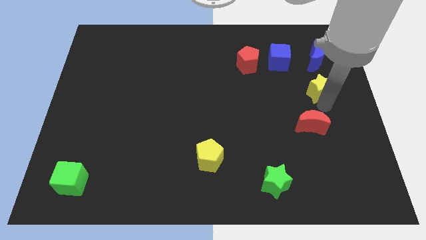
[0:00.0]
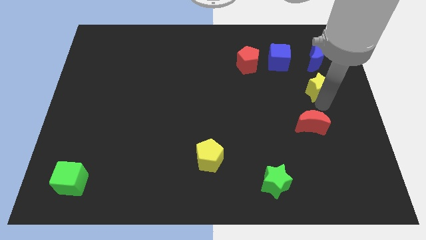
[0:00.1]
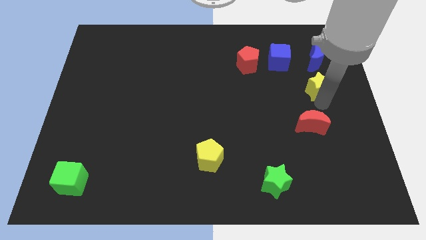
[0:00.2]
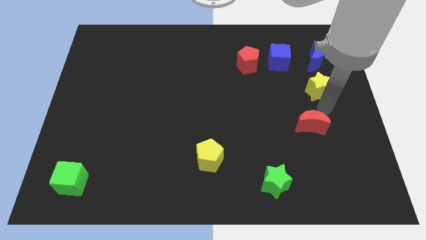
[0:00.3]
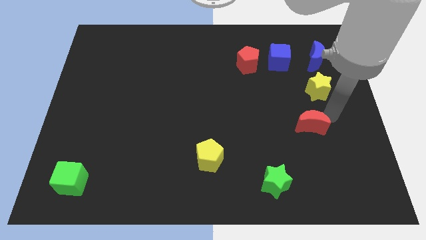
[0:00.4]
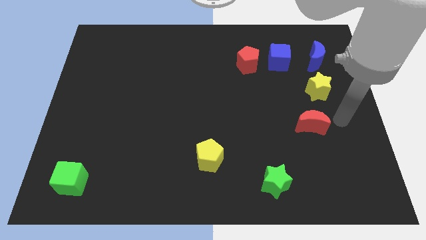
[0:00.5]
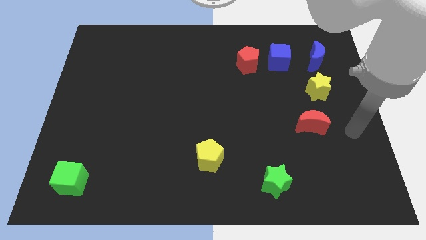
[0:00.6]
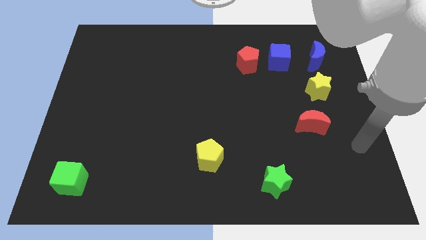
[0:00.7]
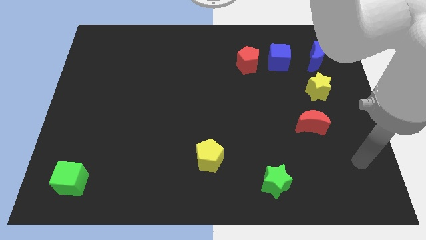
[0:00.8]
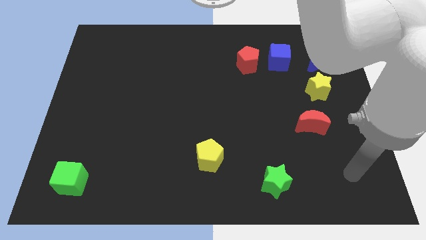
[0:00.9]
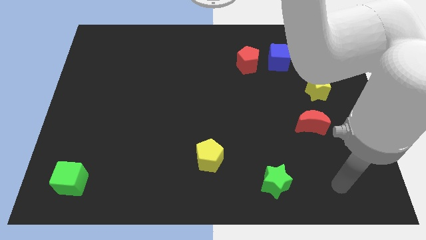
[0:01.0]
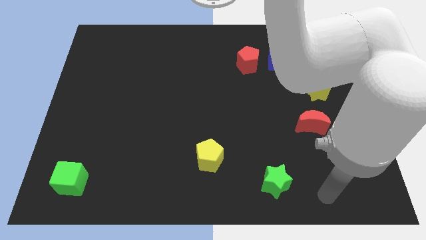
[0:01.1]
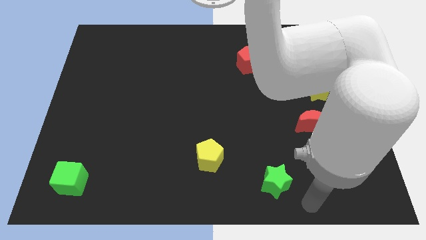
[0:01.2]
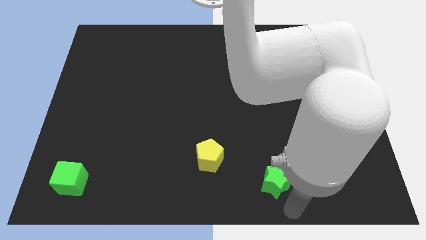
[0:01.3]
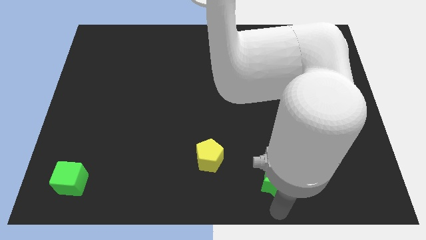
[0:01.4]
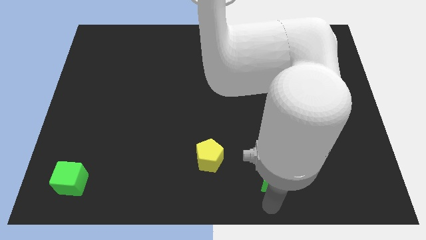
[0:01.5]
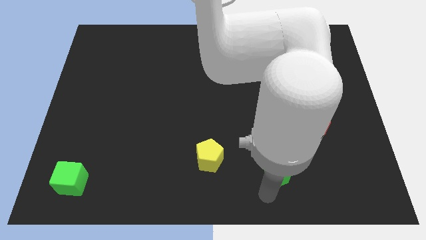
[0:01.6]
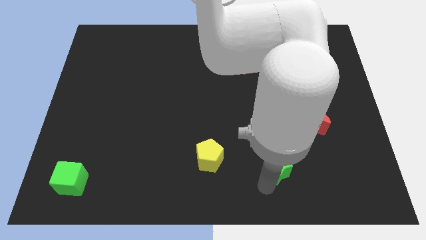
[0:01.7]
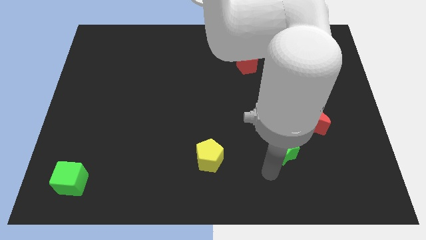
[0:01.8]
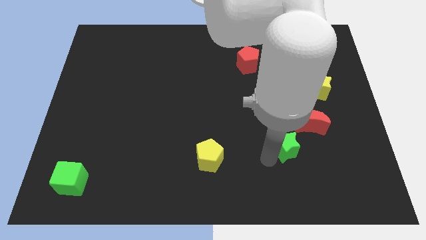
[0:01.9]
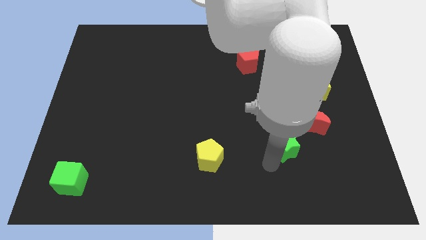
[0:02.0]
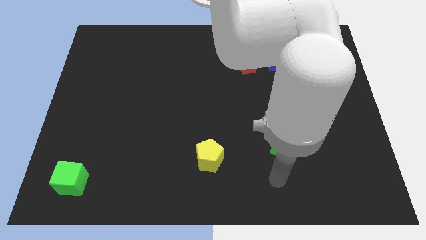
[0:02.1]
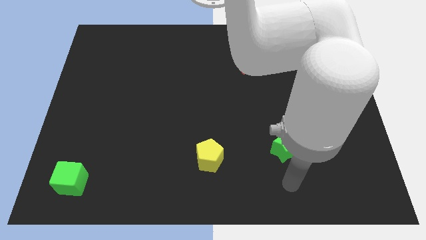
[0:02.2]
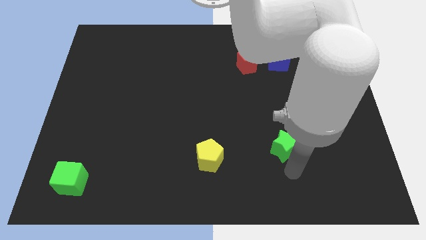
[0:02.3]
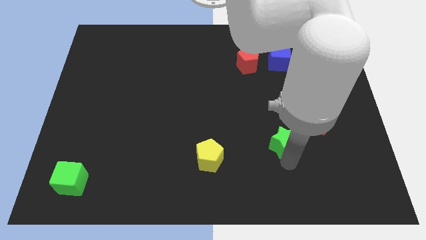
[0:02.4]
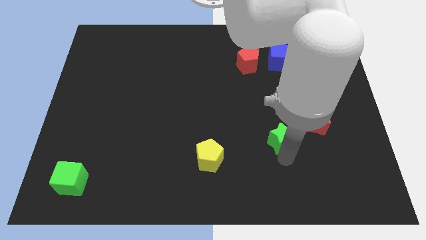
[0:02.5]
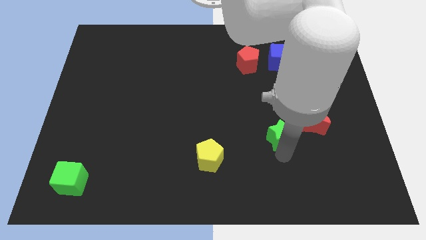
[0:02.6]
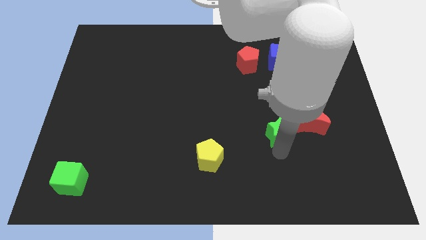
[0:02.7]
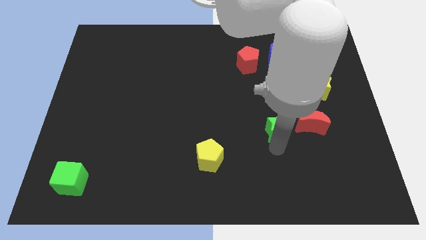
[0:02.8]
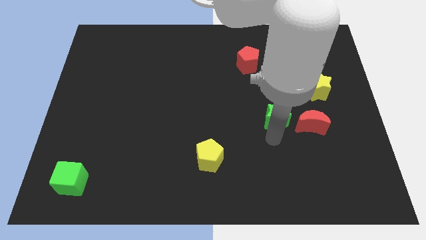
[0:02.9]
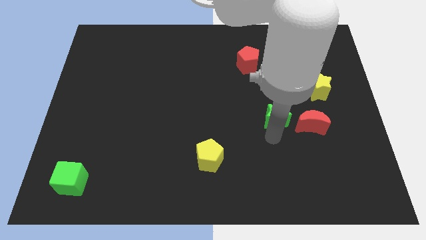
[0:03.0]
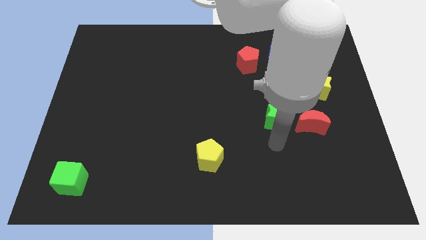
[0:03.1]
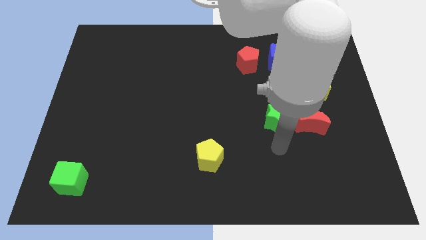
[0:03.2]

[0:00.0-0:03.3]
place the green star to the left of the red moon

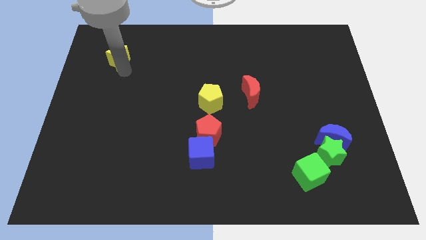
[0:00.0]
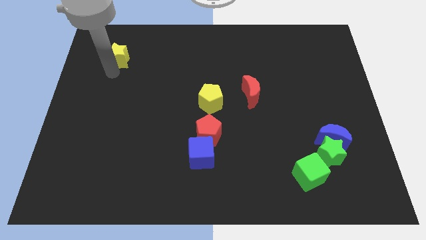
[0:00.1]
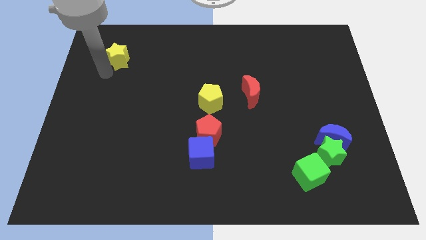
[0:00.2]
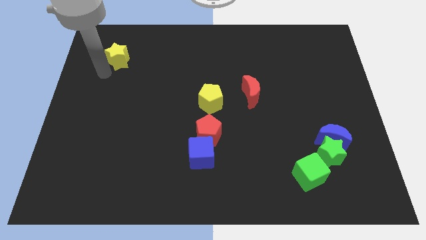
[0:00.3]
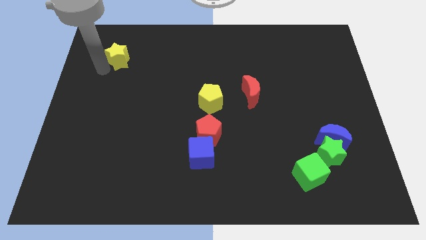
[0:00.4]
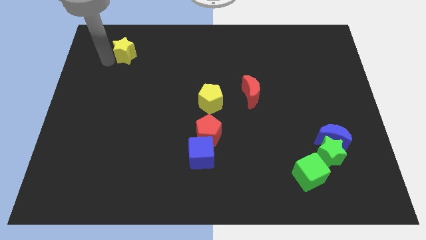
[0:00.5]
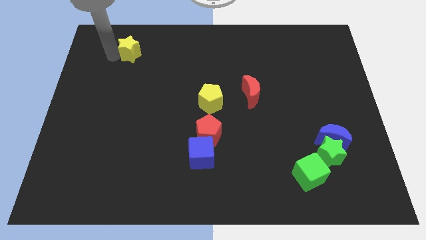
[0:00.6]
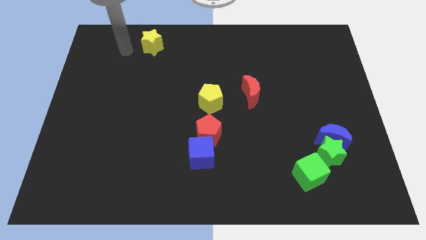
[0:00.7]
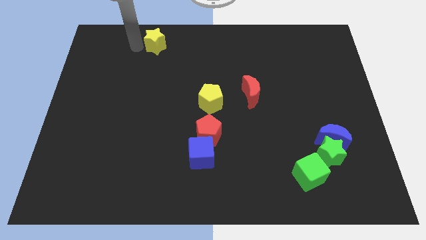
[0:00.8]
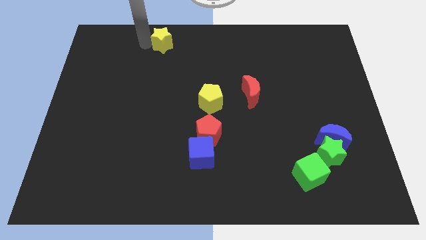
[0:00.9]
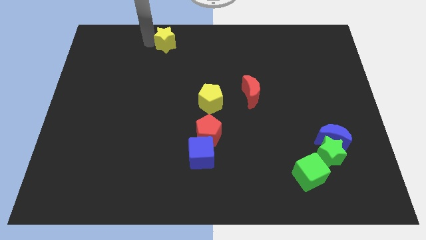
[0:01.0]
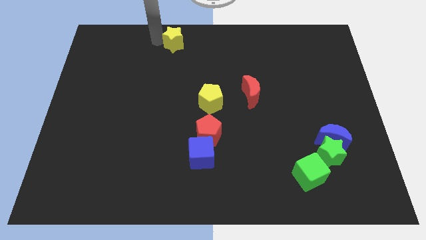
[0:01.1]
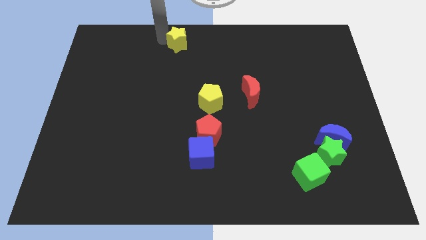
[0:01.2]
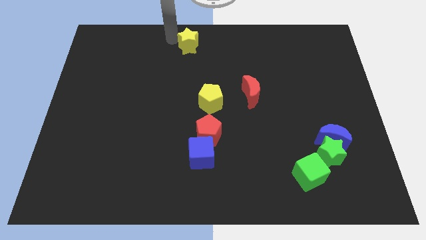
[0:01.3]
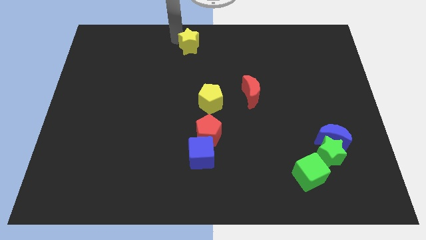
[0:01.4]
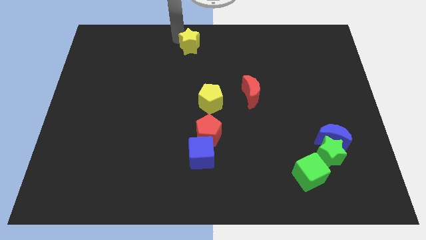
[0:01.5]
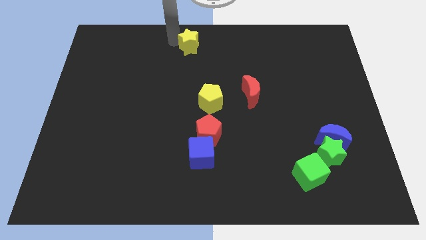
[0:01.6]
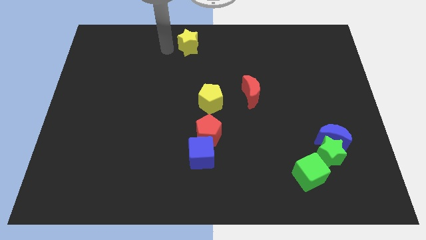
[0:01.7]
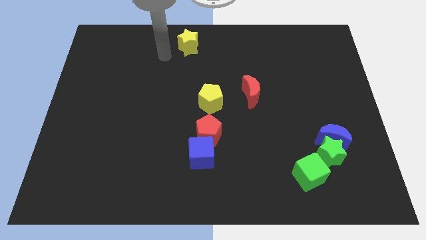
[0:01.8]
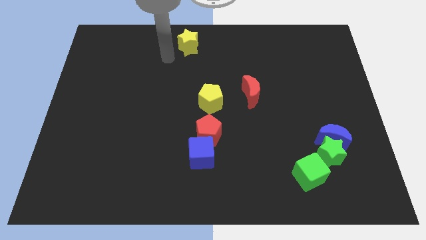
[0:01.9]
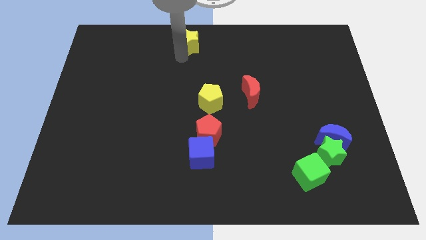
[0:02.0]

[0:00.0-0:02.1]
push yellow star towards top center of the board

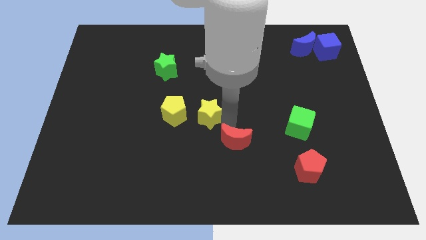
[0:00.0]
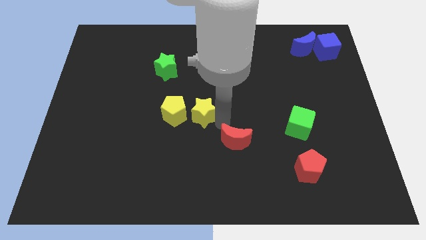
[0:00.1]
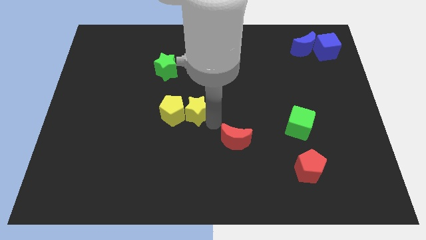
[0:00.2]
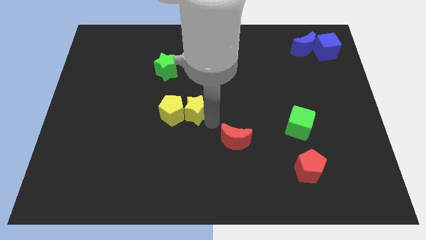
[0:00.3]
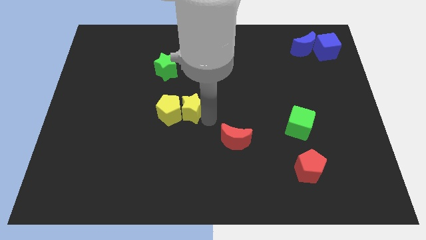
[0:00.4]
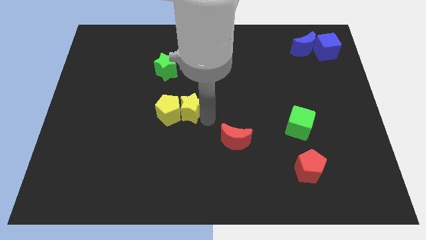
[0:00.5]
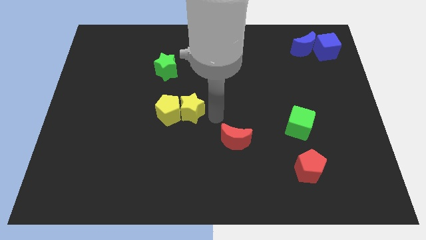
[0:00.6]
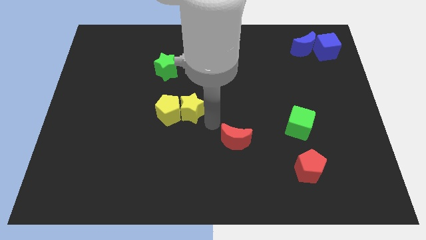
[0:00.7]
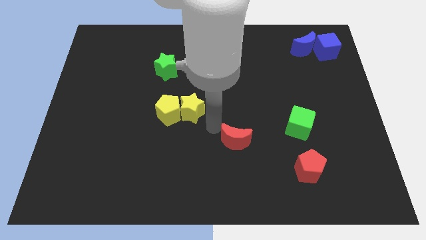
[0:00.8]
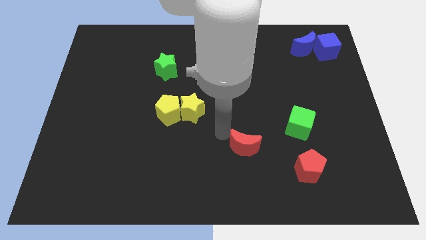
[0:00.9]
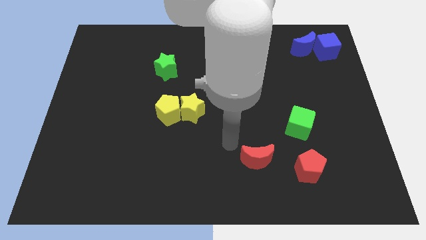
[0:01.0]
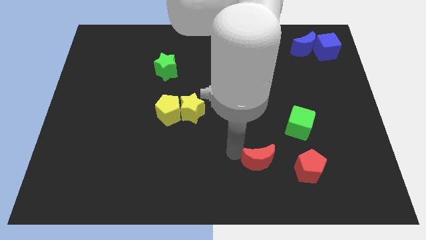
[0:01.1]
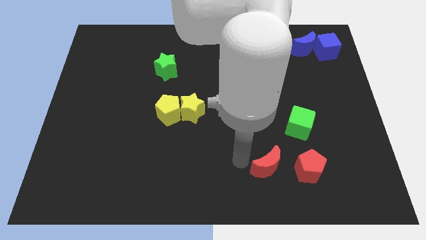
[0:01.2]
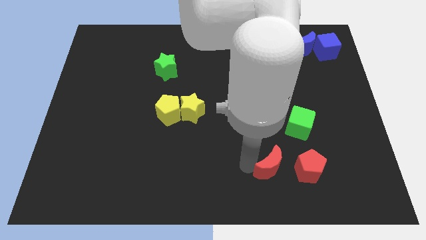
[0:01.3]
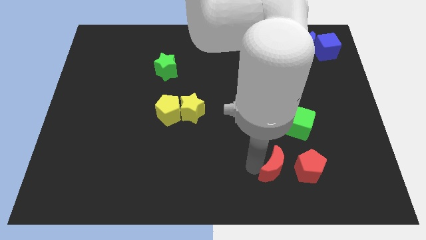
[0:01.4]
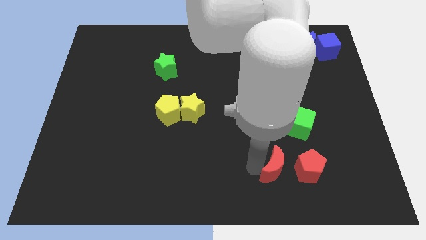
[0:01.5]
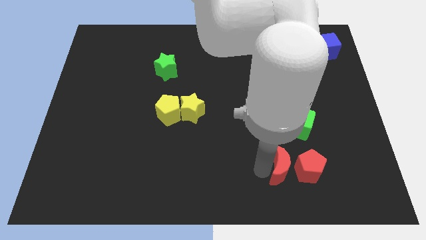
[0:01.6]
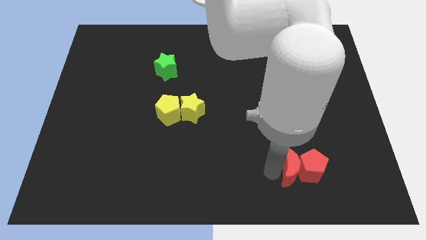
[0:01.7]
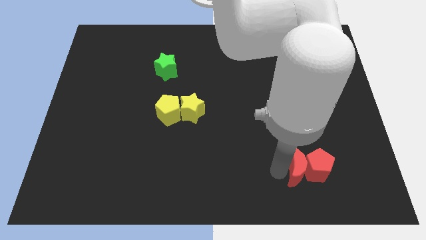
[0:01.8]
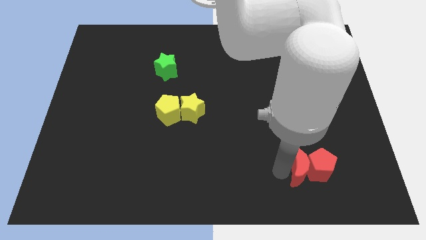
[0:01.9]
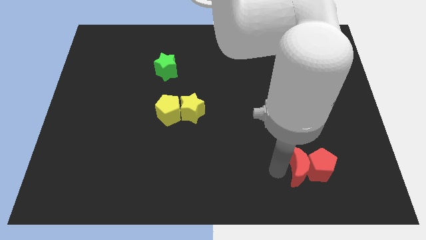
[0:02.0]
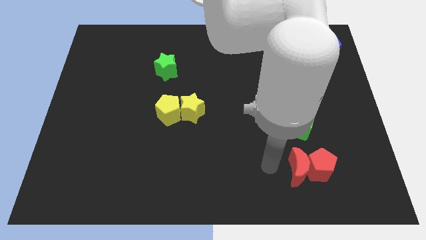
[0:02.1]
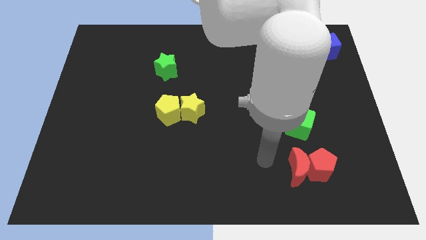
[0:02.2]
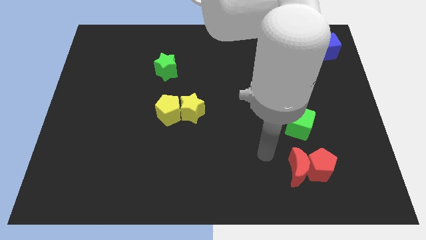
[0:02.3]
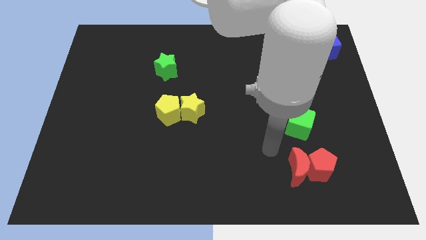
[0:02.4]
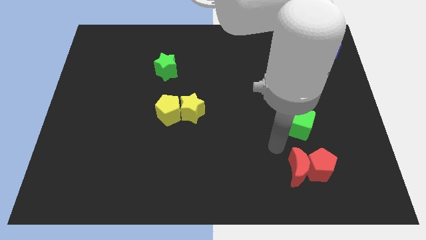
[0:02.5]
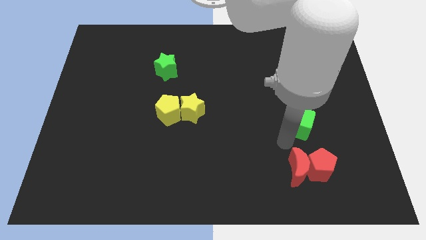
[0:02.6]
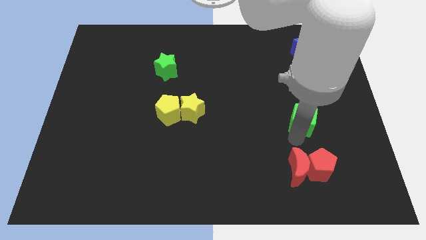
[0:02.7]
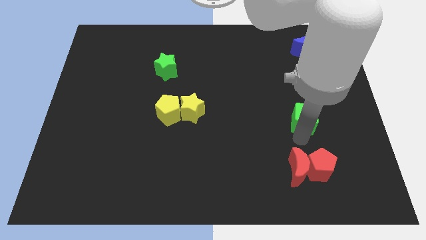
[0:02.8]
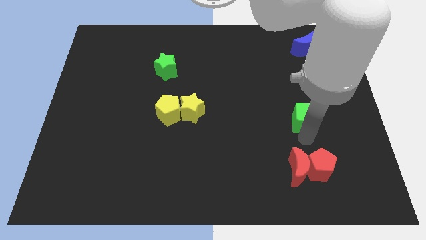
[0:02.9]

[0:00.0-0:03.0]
move red blocks together

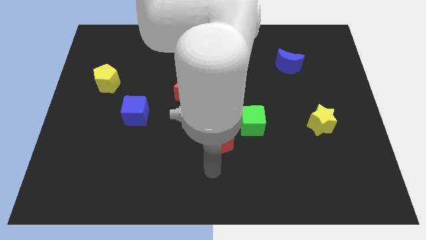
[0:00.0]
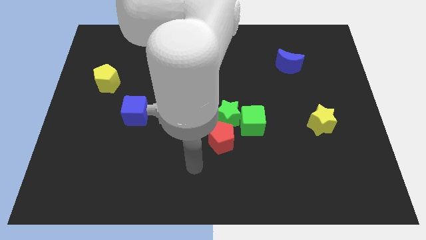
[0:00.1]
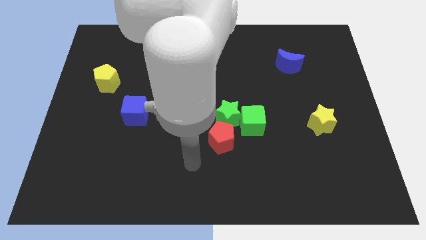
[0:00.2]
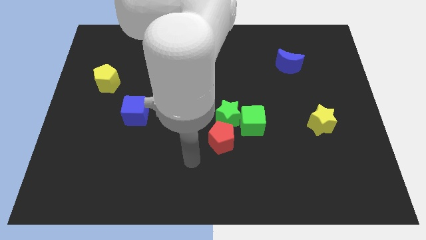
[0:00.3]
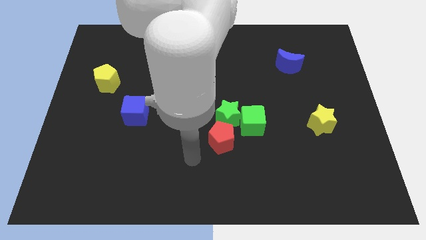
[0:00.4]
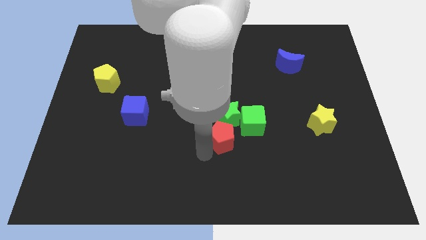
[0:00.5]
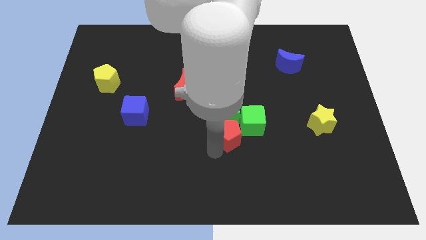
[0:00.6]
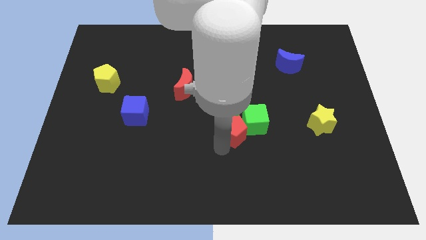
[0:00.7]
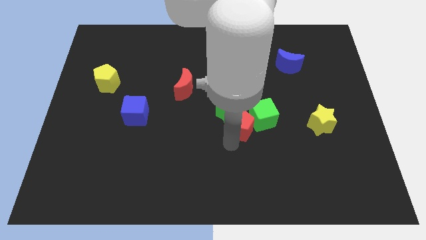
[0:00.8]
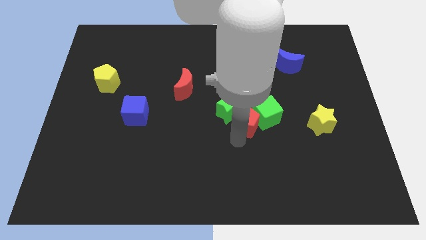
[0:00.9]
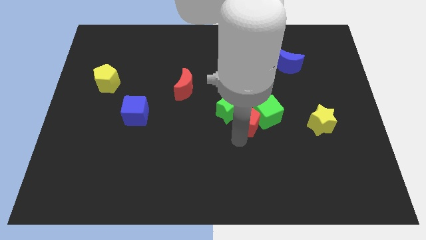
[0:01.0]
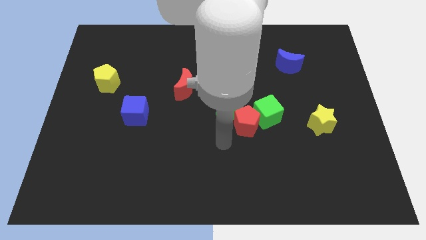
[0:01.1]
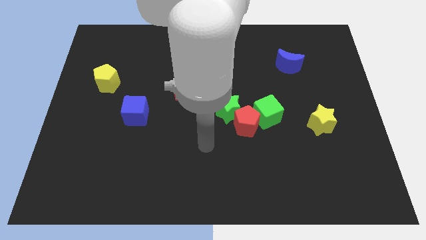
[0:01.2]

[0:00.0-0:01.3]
push the red pentagon upwards slightly
